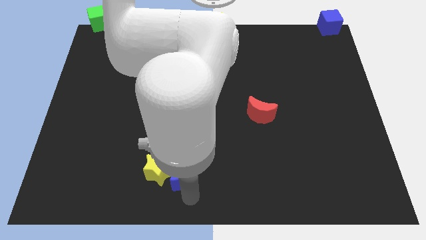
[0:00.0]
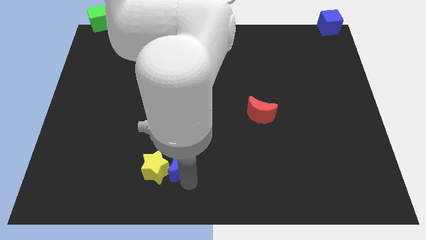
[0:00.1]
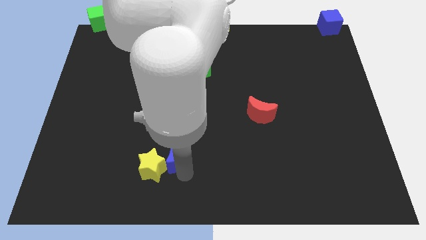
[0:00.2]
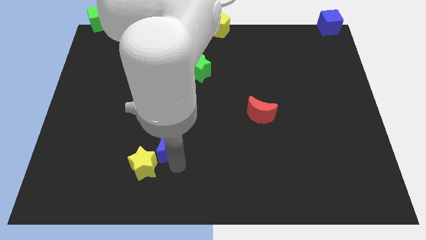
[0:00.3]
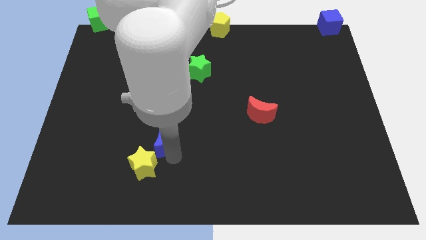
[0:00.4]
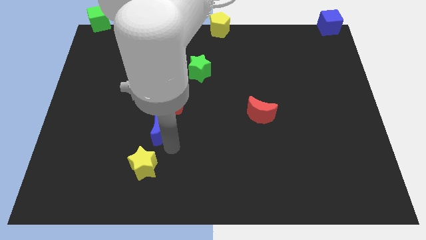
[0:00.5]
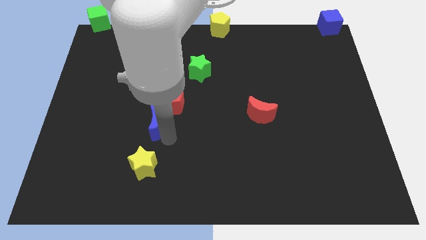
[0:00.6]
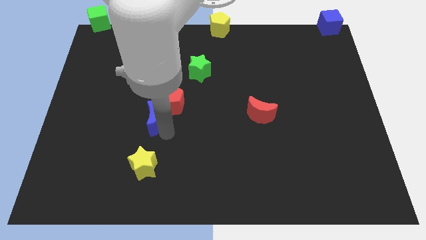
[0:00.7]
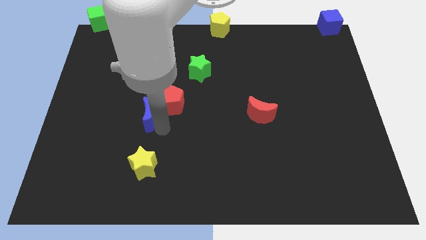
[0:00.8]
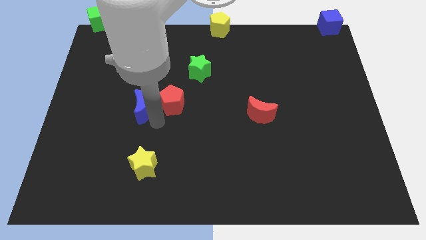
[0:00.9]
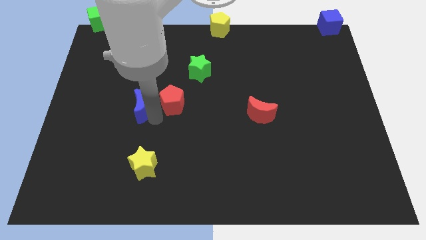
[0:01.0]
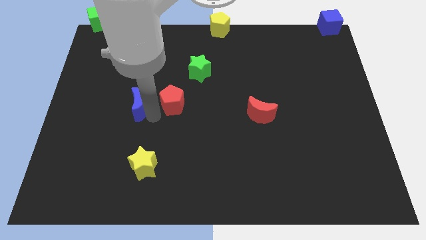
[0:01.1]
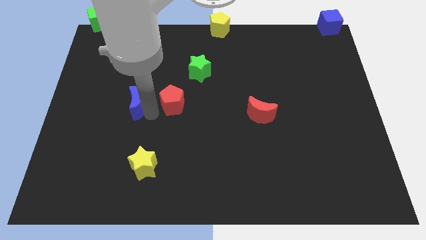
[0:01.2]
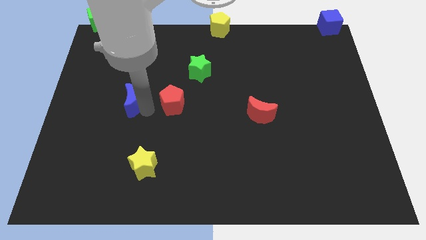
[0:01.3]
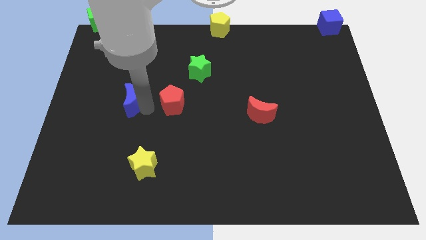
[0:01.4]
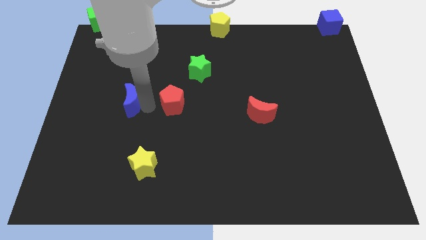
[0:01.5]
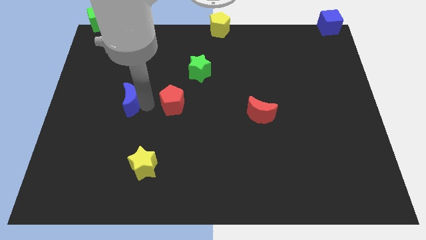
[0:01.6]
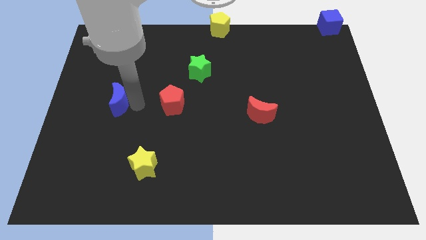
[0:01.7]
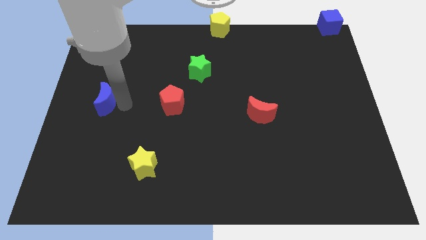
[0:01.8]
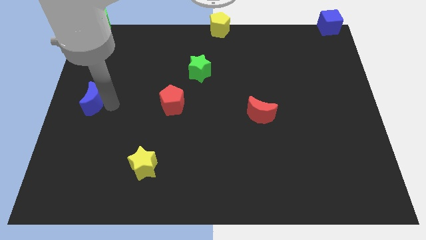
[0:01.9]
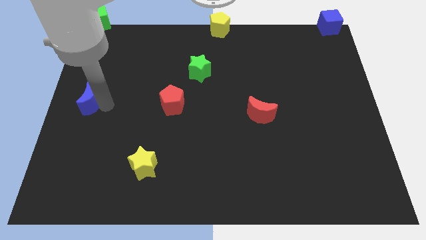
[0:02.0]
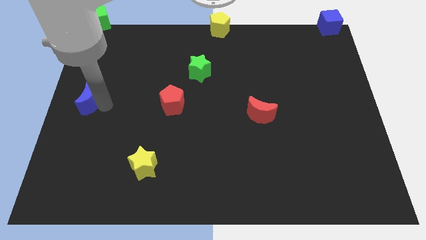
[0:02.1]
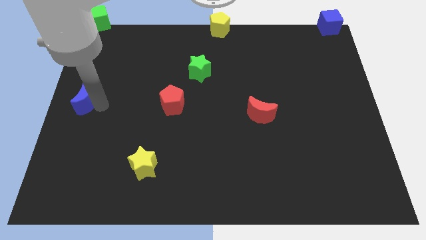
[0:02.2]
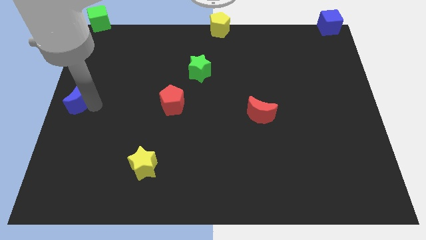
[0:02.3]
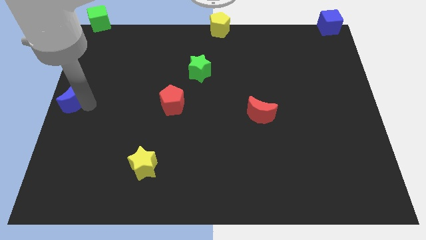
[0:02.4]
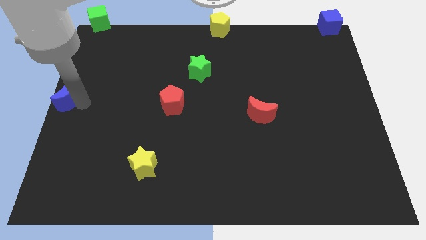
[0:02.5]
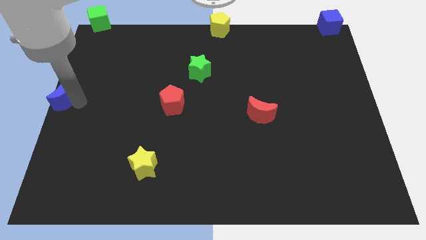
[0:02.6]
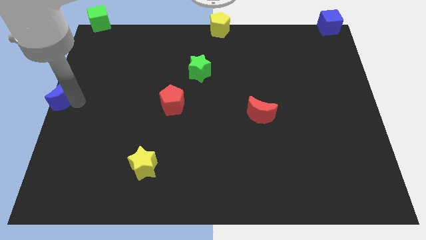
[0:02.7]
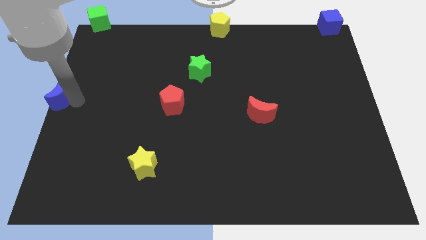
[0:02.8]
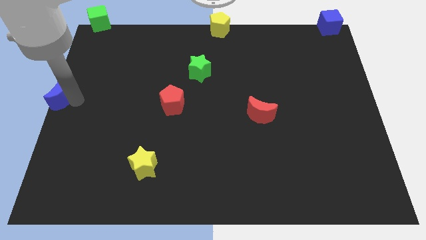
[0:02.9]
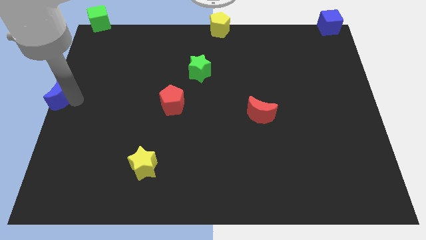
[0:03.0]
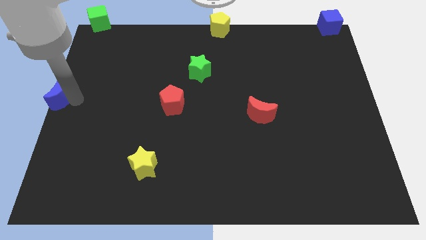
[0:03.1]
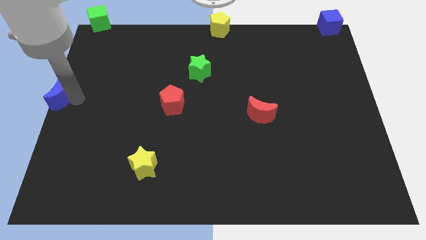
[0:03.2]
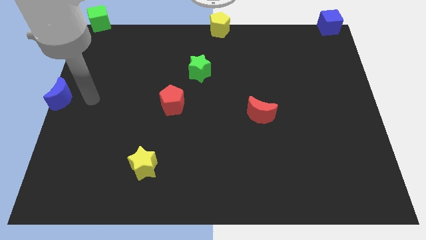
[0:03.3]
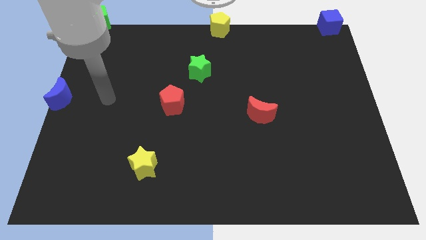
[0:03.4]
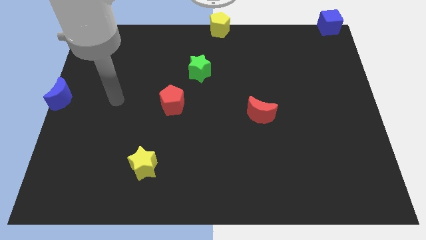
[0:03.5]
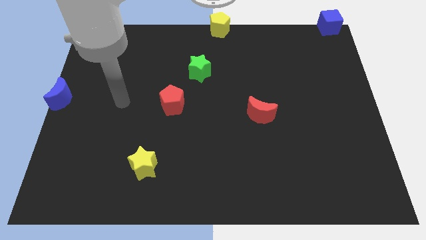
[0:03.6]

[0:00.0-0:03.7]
move the blue crescent towards the center left

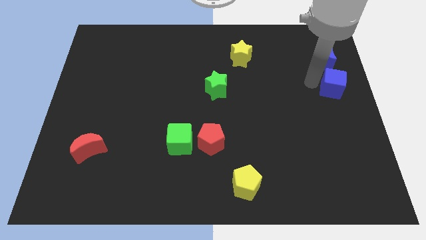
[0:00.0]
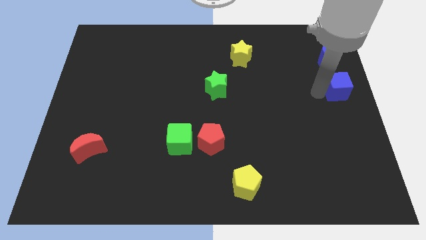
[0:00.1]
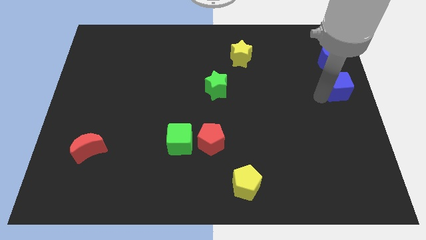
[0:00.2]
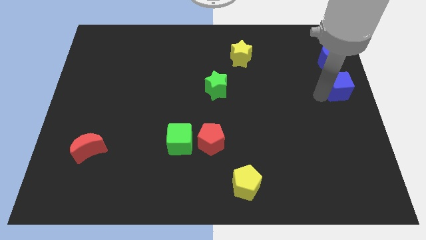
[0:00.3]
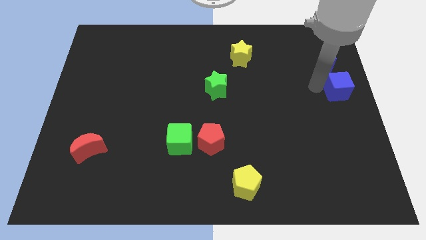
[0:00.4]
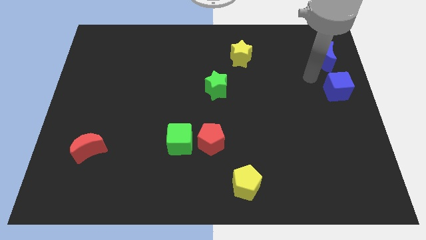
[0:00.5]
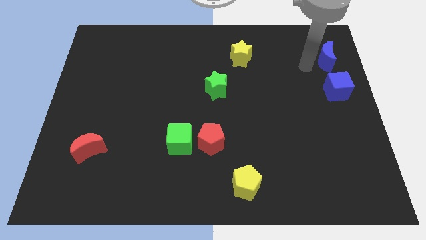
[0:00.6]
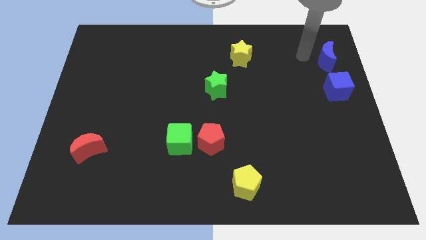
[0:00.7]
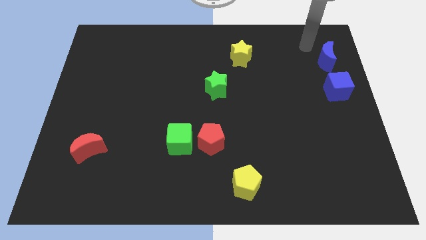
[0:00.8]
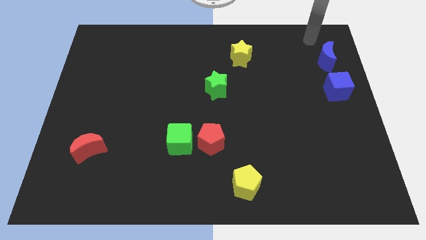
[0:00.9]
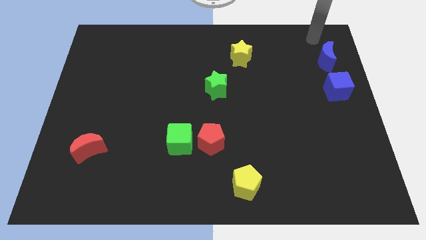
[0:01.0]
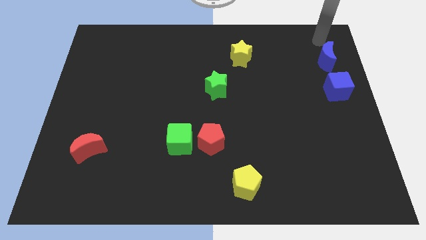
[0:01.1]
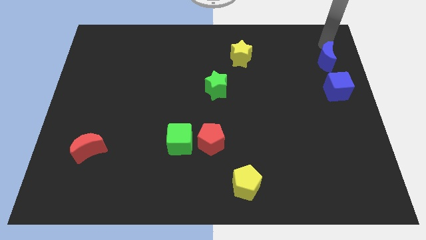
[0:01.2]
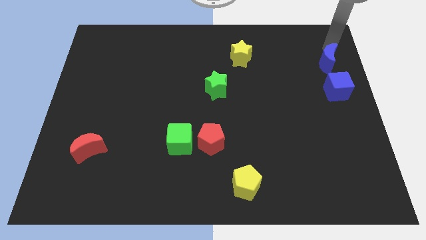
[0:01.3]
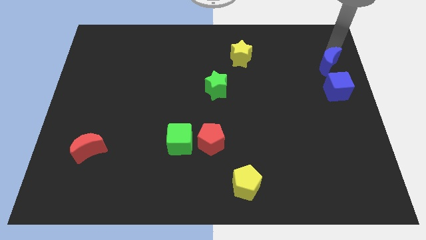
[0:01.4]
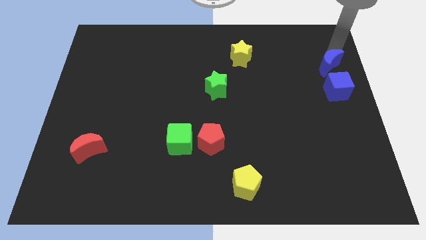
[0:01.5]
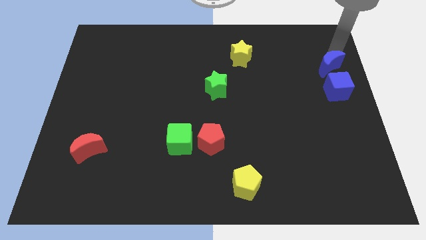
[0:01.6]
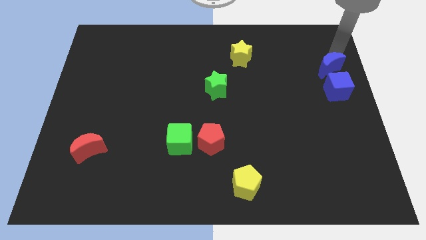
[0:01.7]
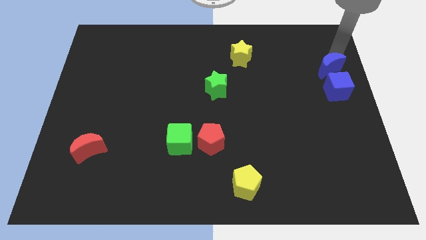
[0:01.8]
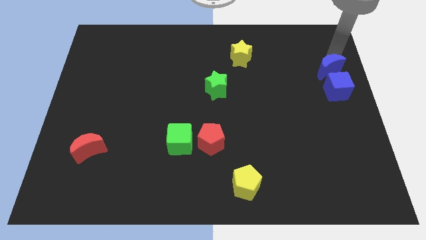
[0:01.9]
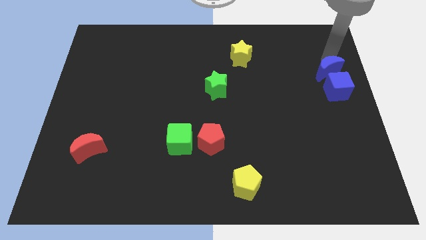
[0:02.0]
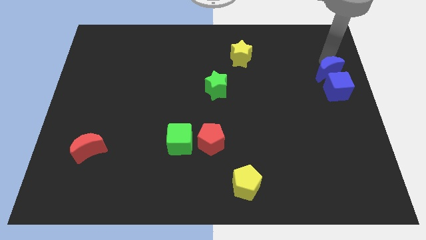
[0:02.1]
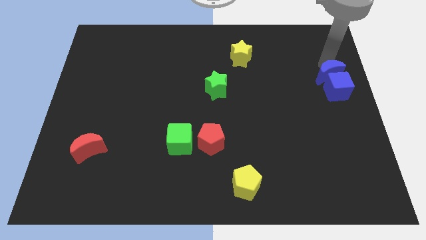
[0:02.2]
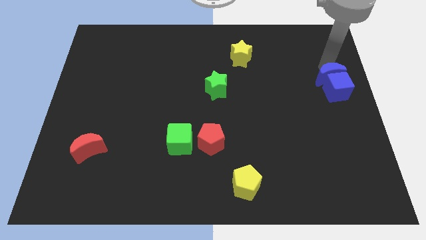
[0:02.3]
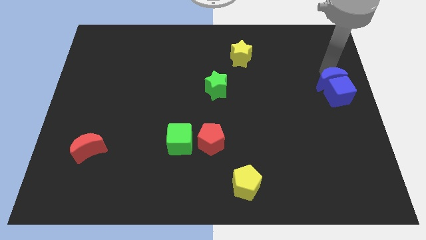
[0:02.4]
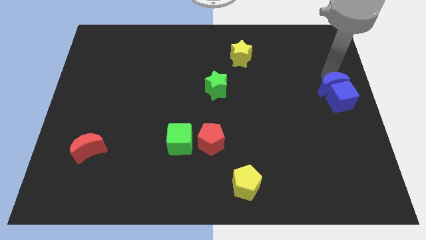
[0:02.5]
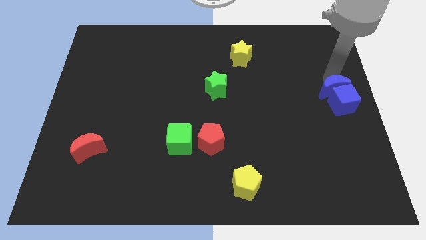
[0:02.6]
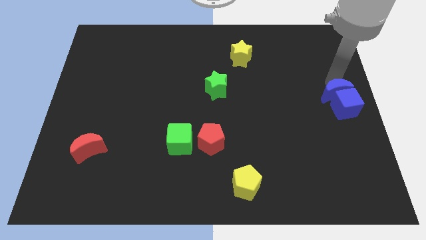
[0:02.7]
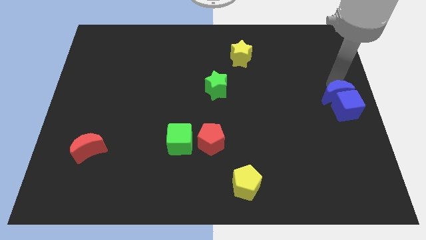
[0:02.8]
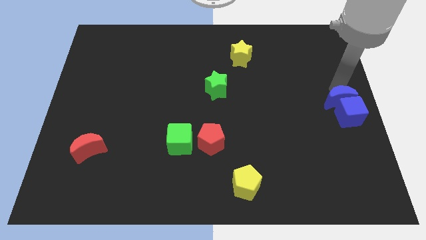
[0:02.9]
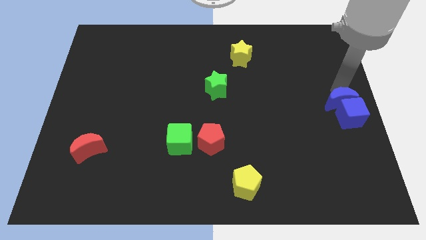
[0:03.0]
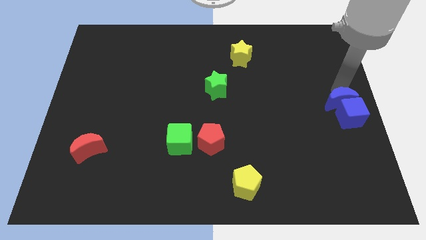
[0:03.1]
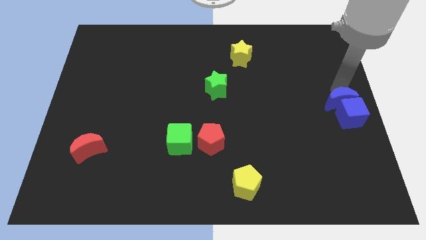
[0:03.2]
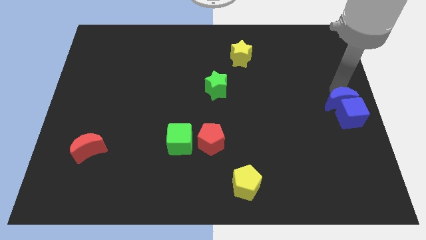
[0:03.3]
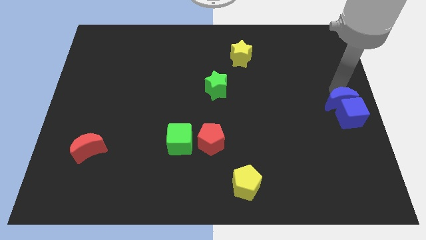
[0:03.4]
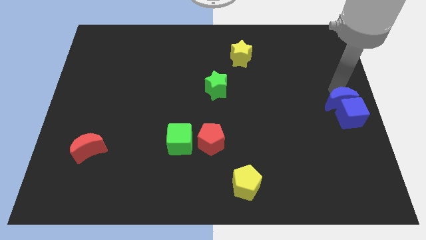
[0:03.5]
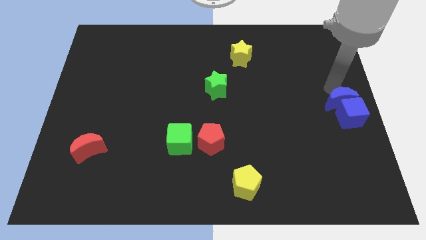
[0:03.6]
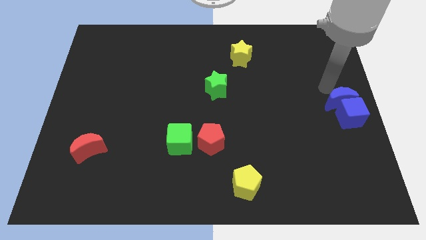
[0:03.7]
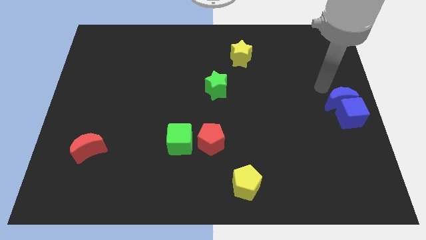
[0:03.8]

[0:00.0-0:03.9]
place both the blue blocks at the center right of the board

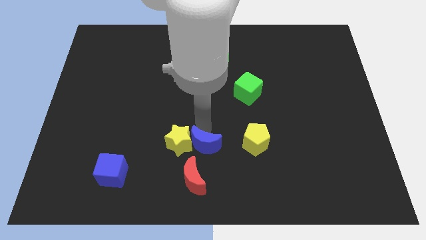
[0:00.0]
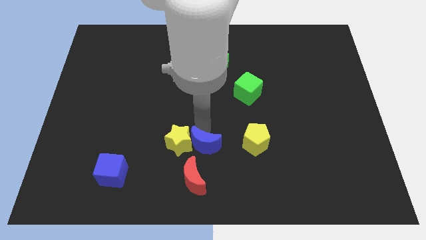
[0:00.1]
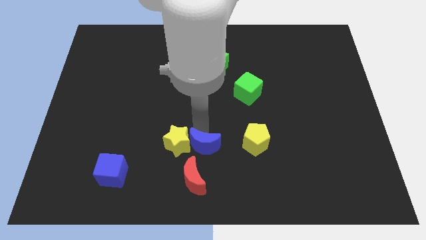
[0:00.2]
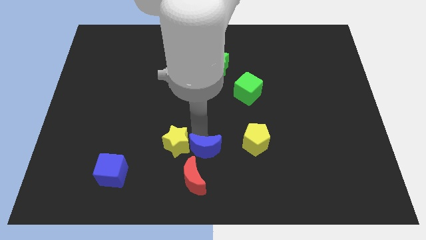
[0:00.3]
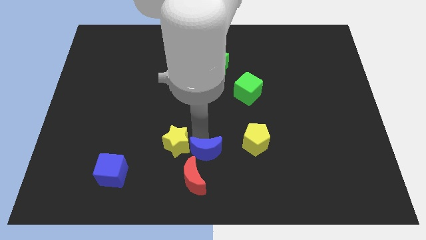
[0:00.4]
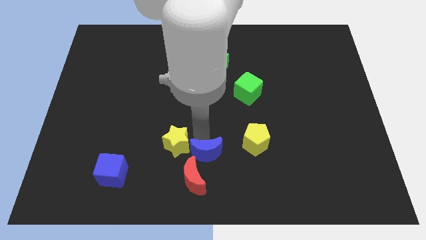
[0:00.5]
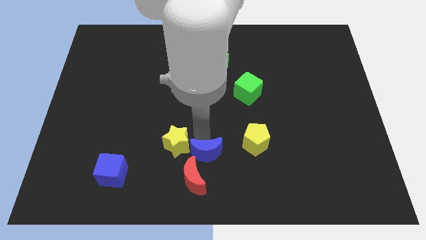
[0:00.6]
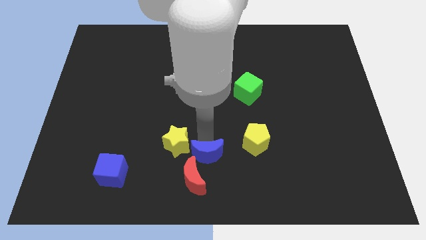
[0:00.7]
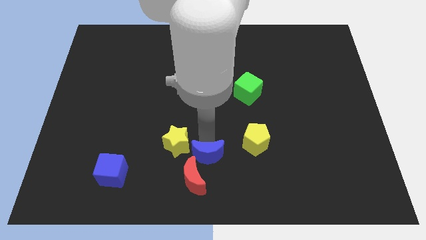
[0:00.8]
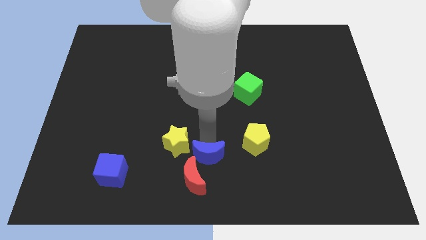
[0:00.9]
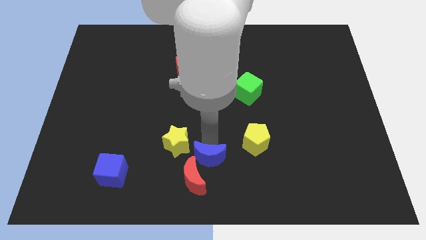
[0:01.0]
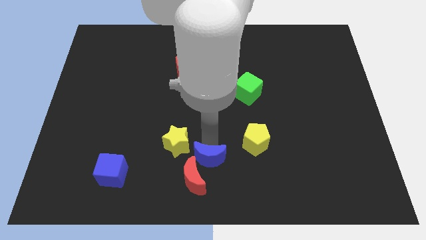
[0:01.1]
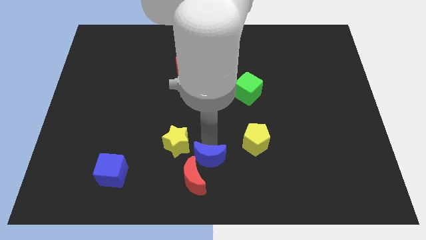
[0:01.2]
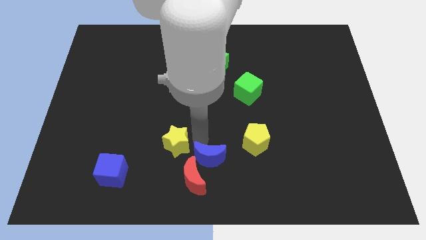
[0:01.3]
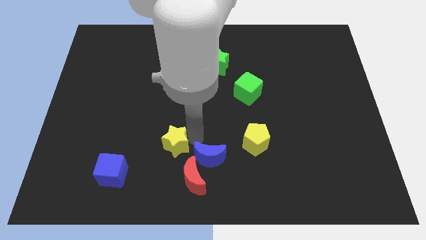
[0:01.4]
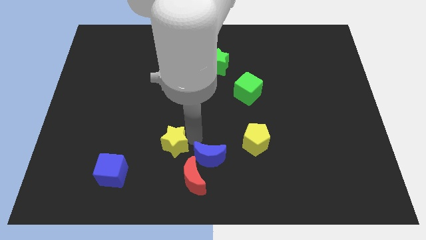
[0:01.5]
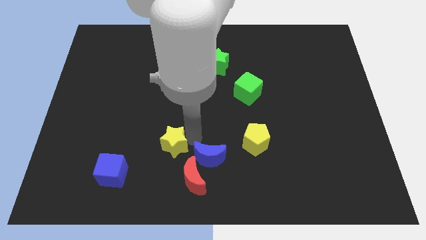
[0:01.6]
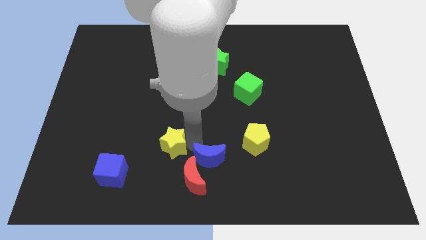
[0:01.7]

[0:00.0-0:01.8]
slightly push the blue moon and the yellow star towards the bottom
